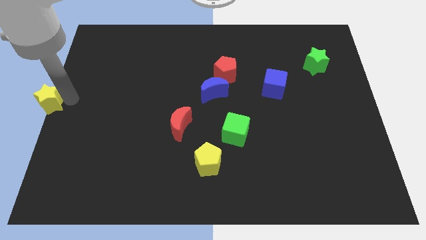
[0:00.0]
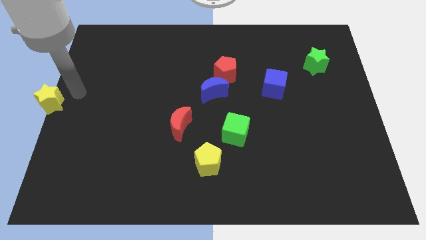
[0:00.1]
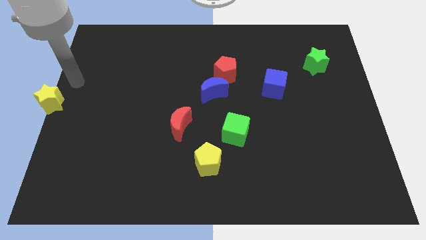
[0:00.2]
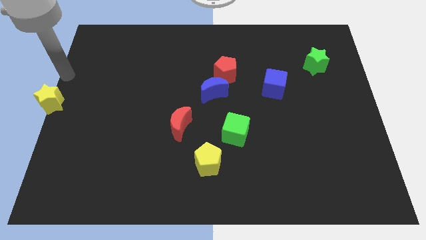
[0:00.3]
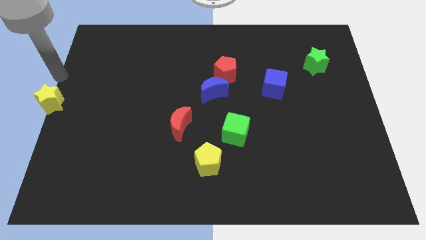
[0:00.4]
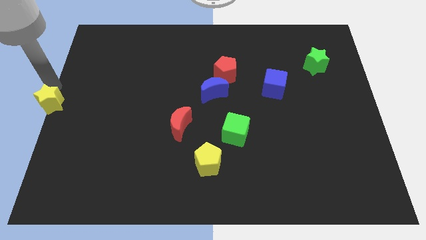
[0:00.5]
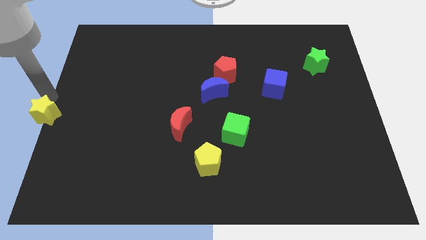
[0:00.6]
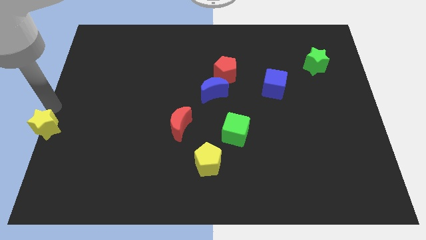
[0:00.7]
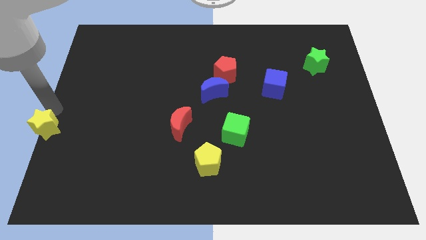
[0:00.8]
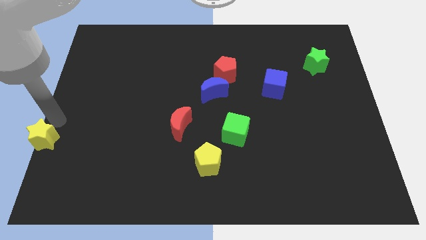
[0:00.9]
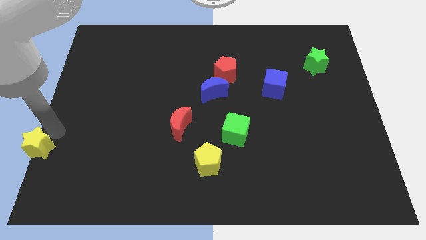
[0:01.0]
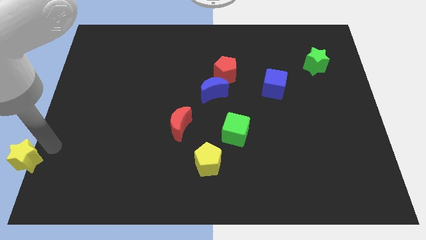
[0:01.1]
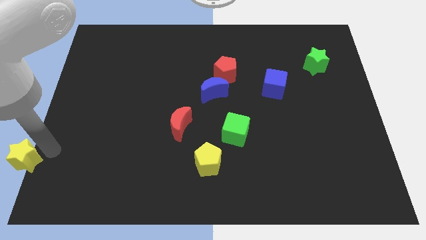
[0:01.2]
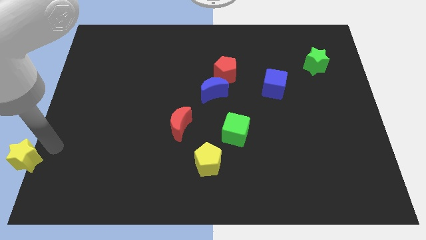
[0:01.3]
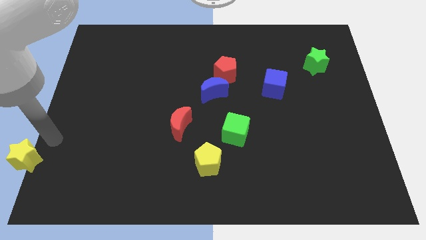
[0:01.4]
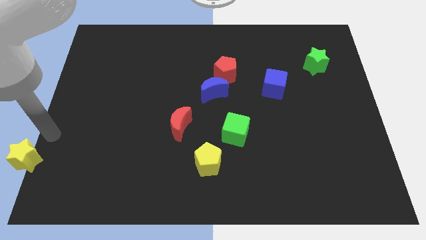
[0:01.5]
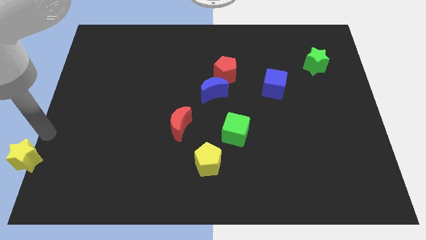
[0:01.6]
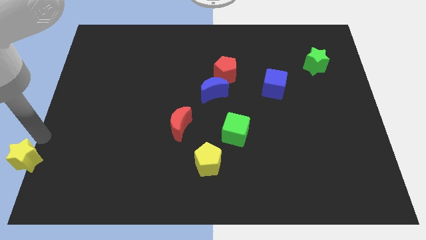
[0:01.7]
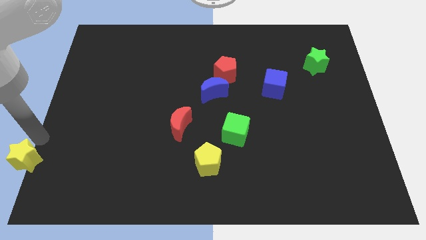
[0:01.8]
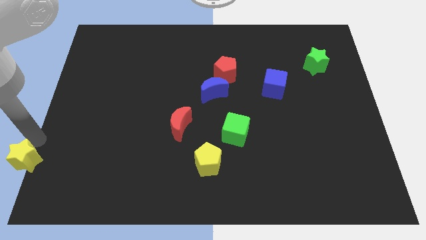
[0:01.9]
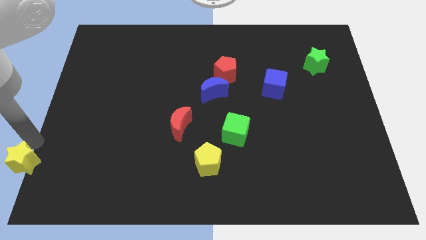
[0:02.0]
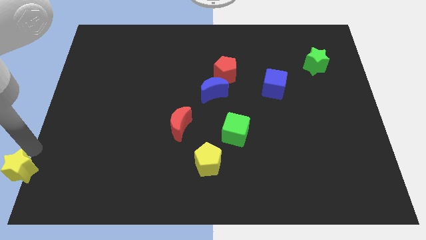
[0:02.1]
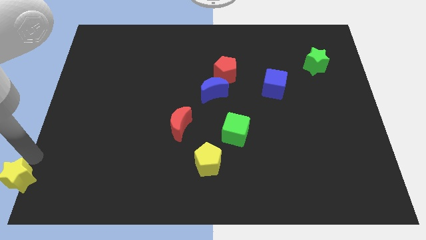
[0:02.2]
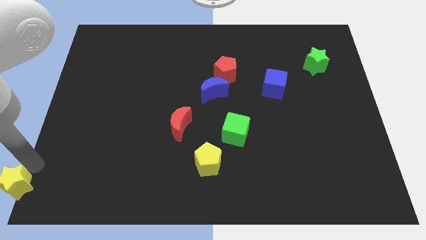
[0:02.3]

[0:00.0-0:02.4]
place the yellow star at the bottom left end

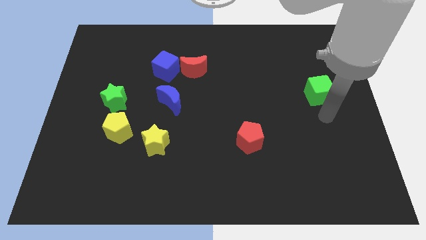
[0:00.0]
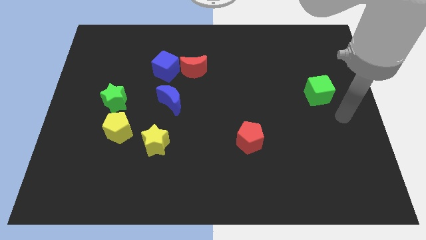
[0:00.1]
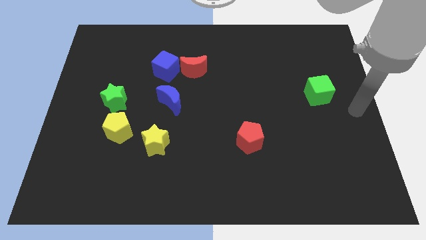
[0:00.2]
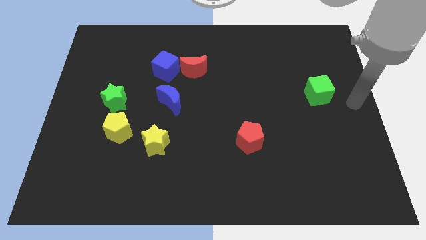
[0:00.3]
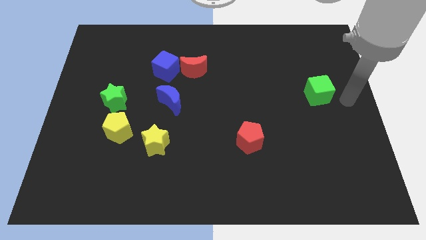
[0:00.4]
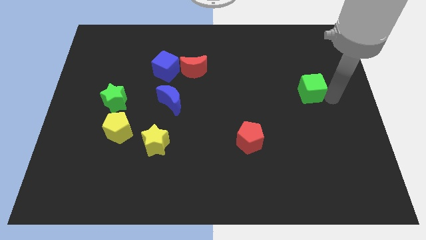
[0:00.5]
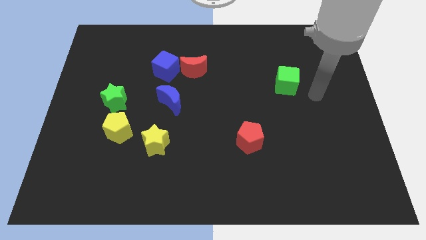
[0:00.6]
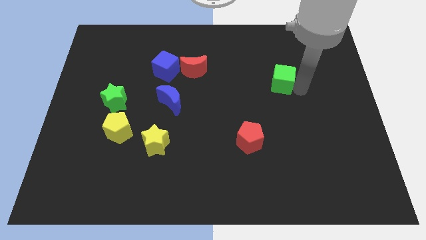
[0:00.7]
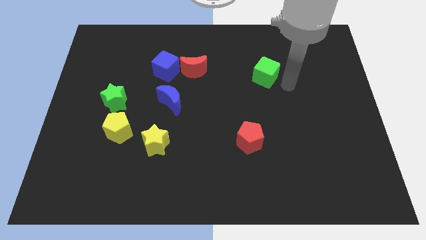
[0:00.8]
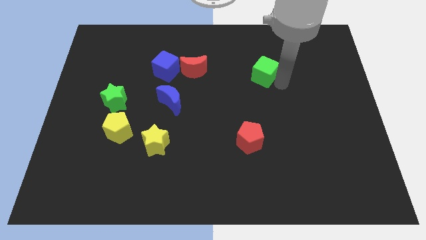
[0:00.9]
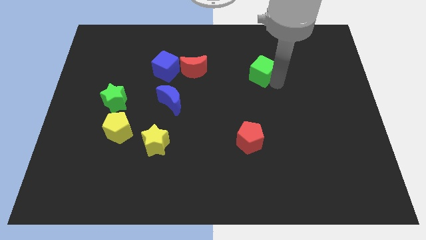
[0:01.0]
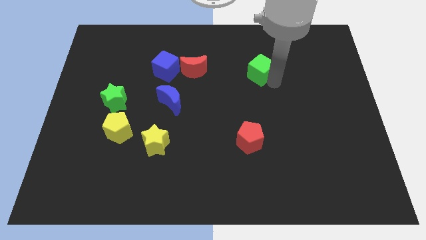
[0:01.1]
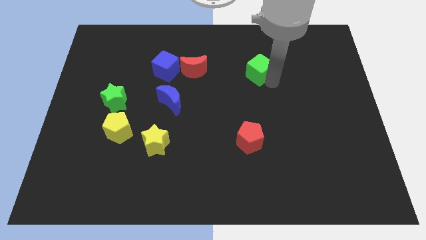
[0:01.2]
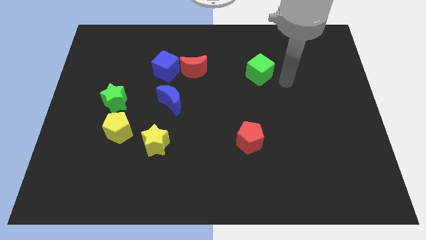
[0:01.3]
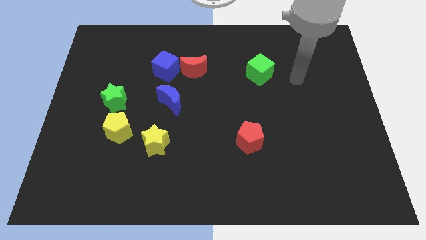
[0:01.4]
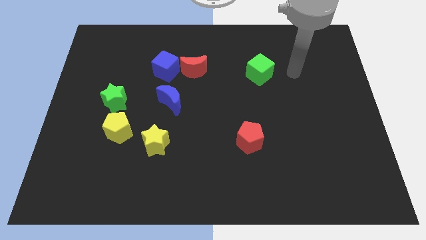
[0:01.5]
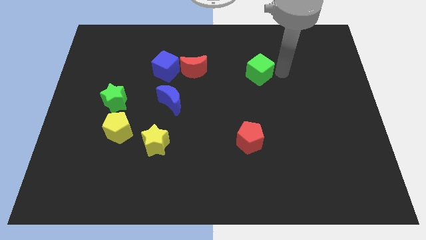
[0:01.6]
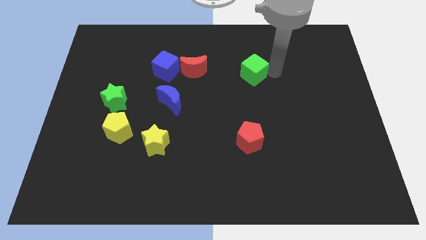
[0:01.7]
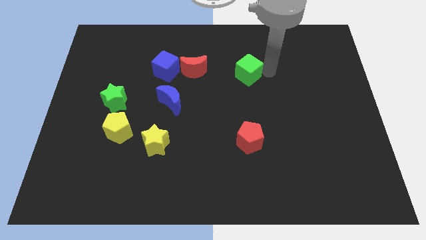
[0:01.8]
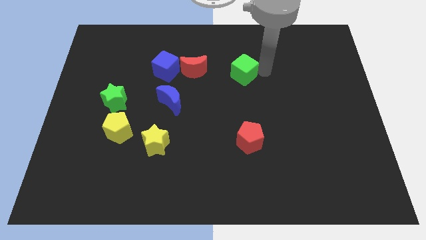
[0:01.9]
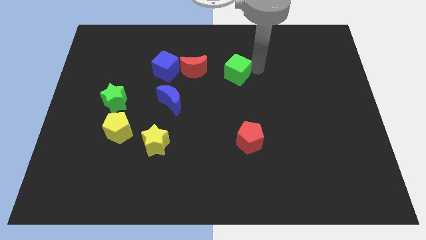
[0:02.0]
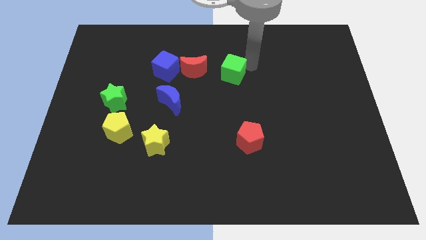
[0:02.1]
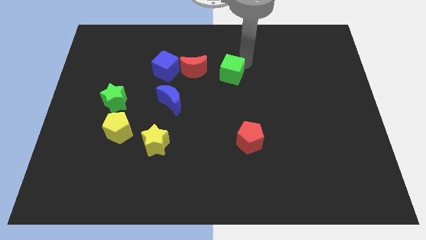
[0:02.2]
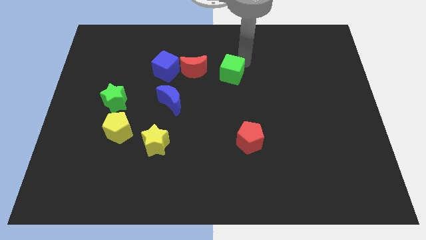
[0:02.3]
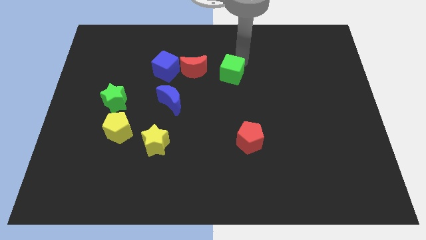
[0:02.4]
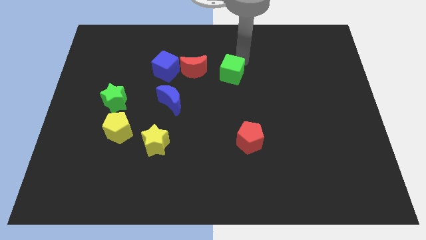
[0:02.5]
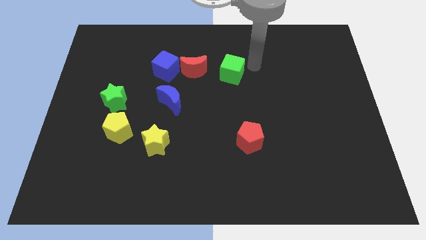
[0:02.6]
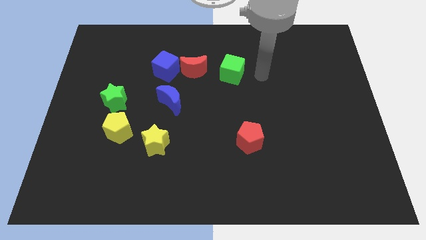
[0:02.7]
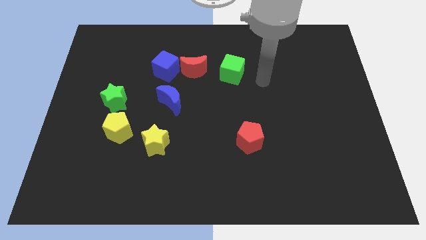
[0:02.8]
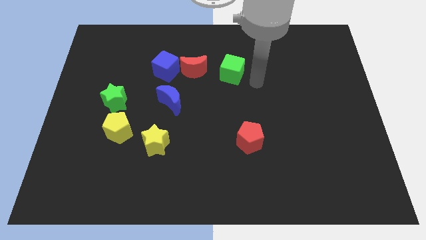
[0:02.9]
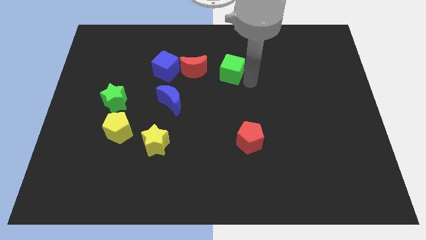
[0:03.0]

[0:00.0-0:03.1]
place the green cube right to the red moon

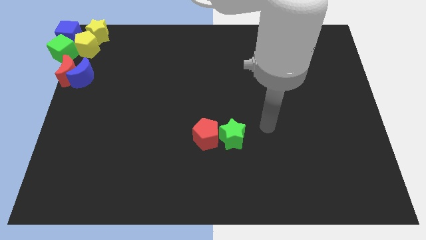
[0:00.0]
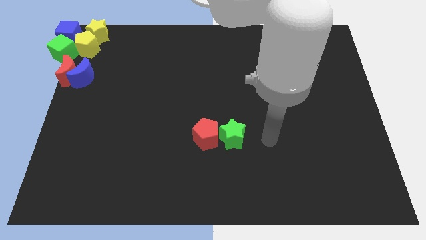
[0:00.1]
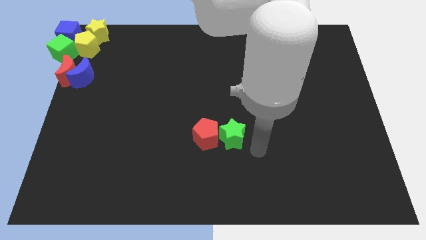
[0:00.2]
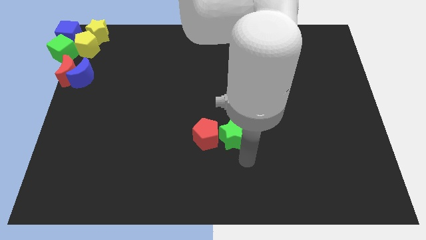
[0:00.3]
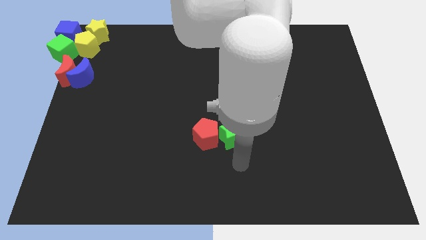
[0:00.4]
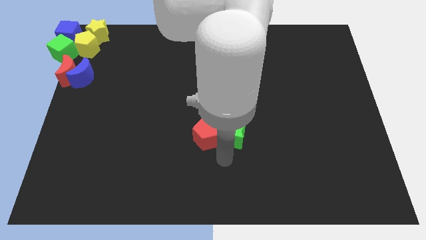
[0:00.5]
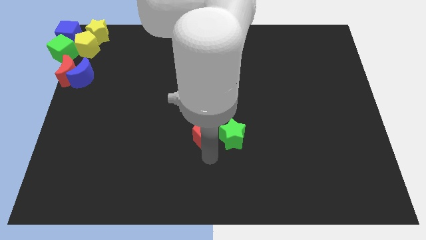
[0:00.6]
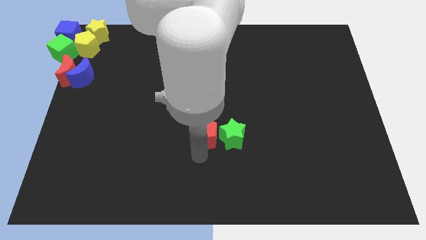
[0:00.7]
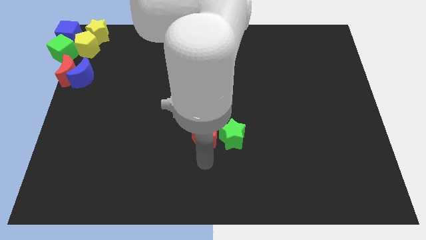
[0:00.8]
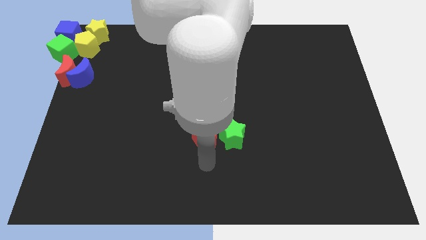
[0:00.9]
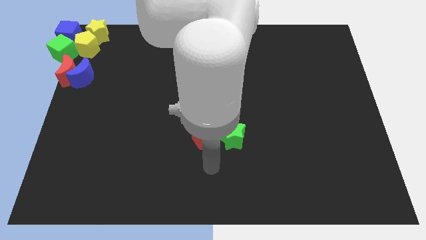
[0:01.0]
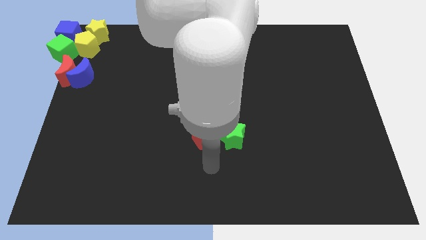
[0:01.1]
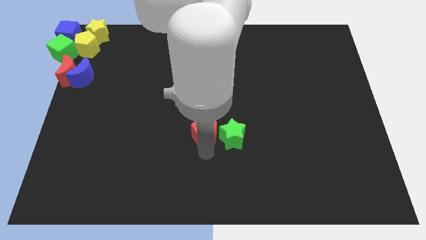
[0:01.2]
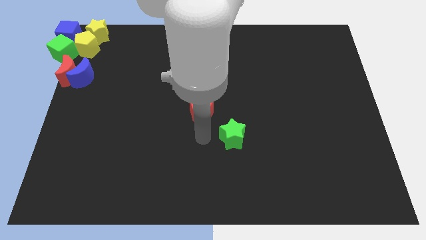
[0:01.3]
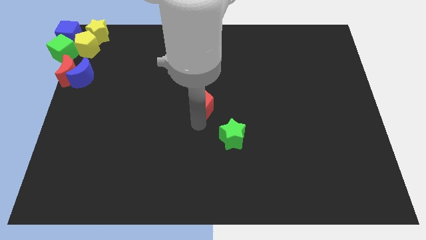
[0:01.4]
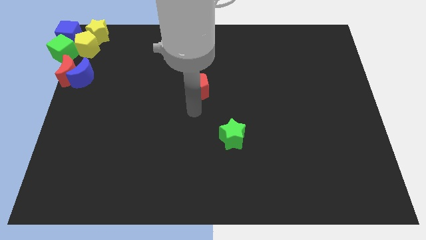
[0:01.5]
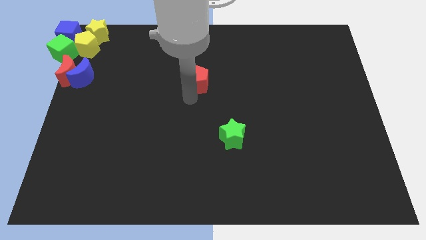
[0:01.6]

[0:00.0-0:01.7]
separate the red pentagon from the green star

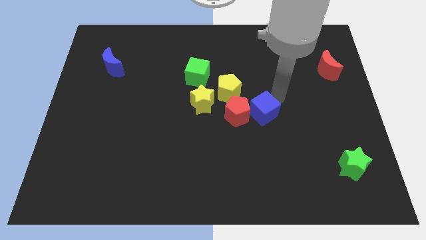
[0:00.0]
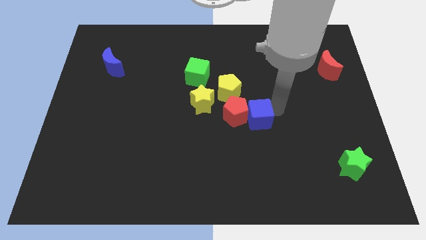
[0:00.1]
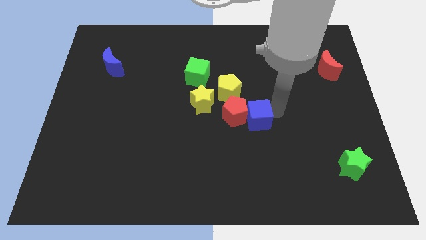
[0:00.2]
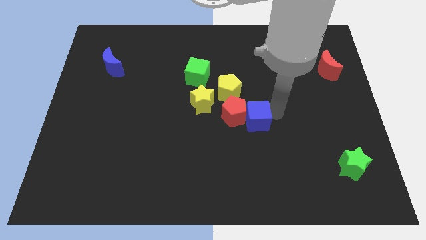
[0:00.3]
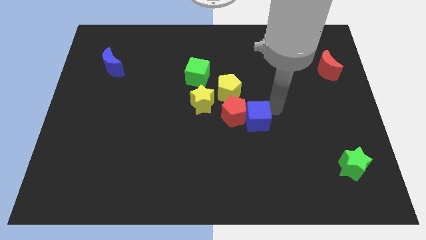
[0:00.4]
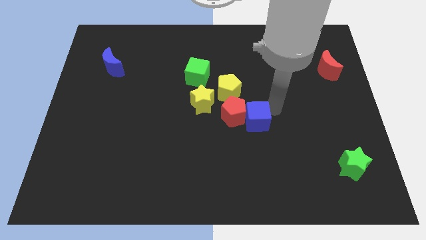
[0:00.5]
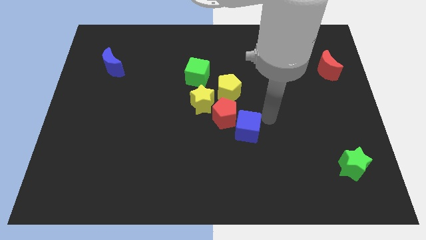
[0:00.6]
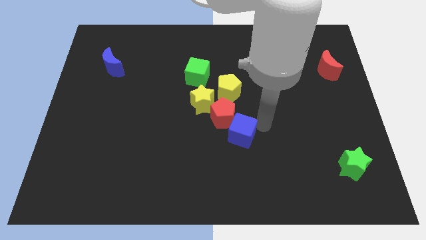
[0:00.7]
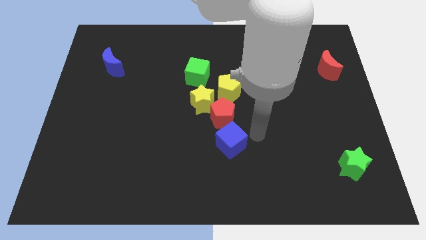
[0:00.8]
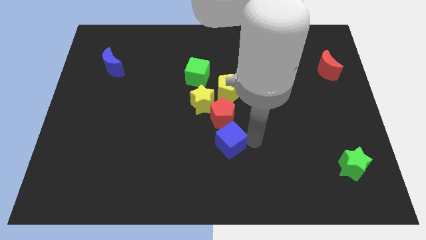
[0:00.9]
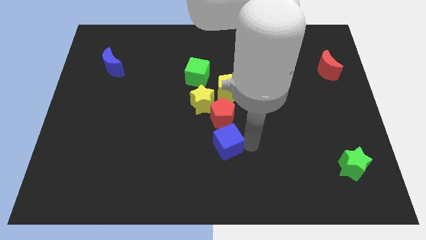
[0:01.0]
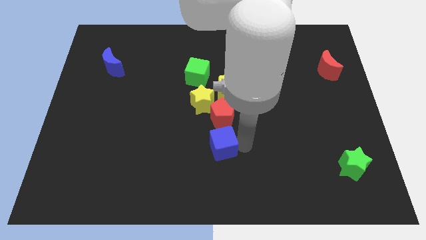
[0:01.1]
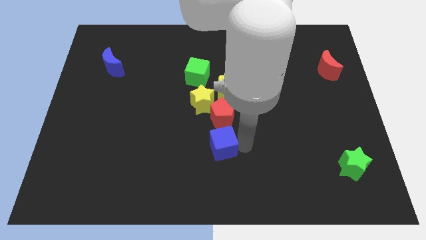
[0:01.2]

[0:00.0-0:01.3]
move the blue cube to the bottom of the red pentagon

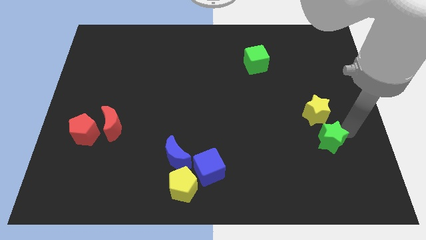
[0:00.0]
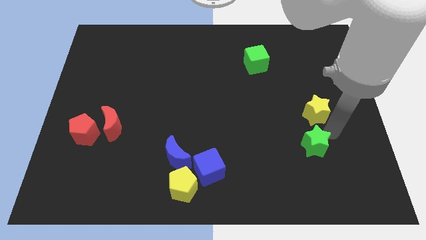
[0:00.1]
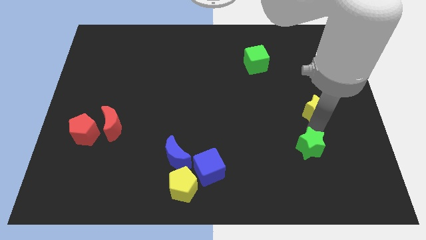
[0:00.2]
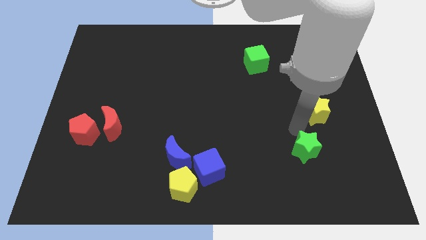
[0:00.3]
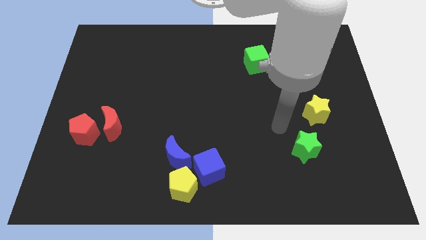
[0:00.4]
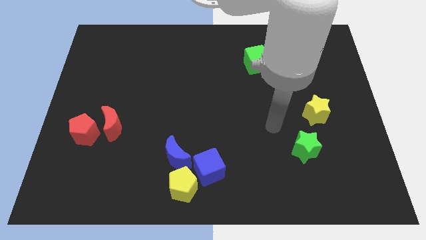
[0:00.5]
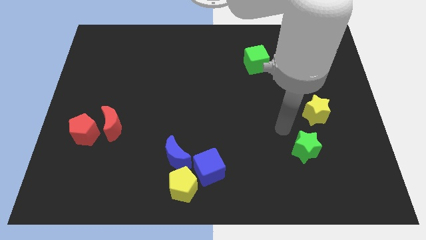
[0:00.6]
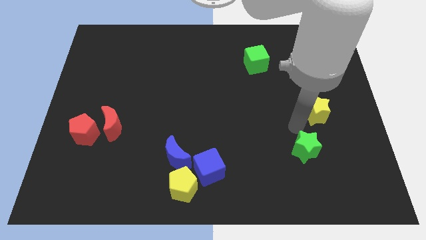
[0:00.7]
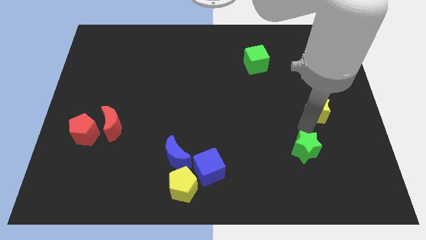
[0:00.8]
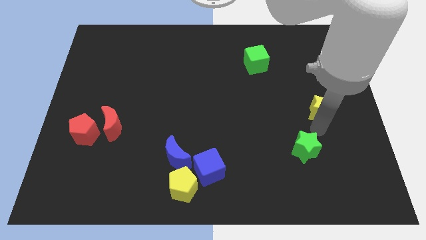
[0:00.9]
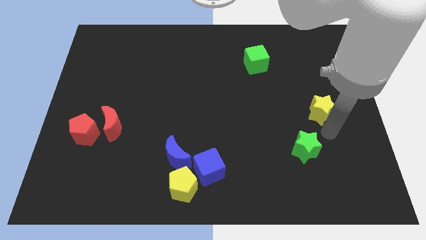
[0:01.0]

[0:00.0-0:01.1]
move the green star to the bottom left of the yellow star
